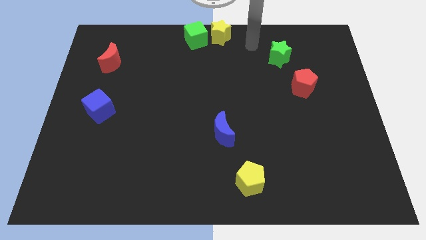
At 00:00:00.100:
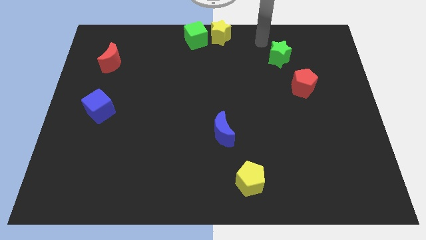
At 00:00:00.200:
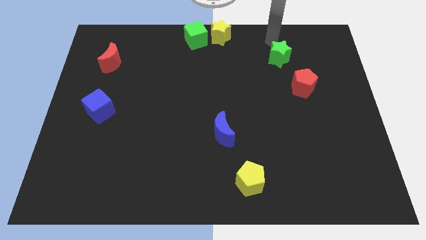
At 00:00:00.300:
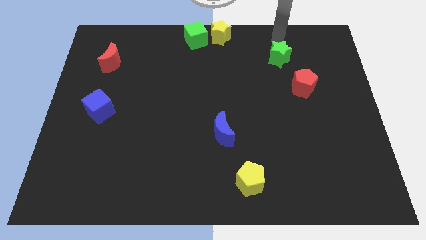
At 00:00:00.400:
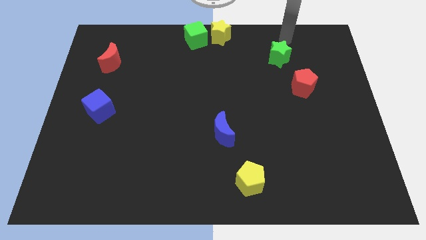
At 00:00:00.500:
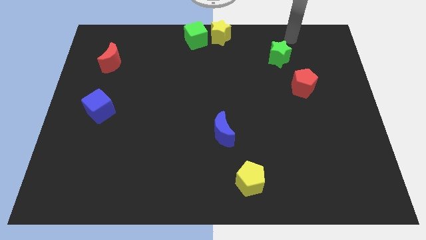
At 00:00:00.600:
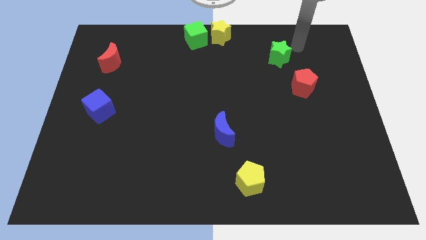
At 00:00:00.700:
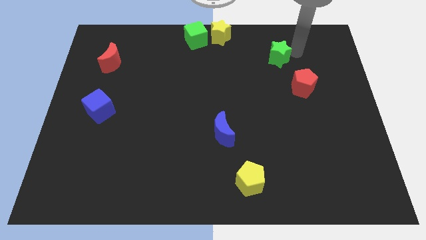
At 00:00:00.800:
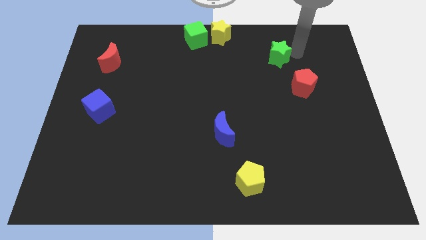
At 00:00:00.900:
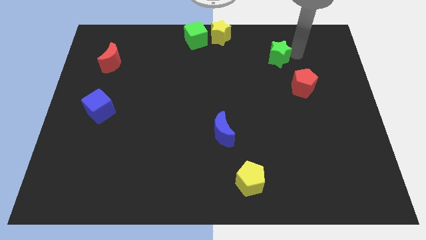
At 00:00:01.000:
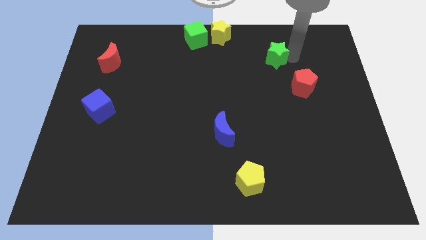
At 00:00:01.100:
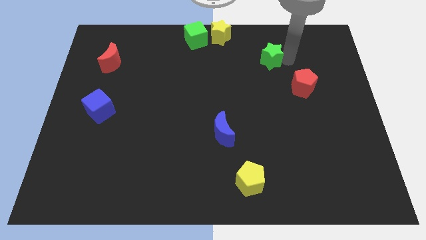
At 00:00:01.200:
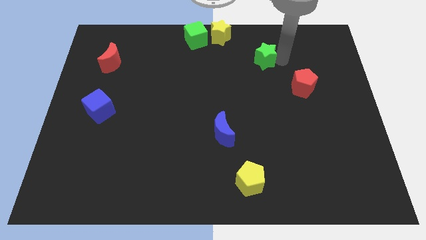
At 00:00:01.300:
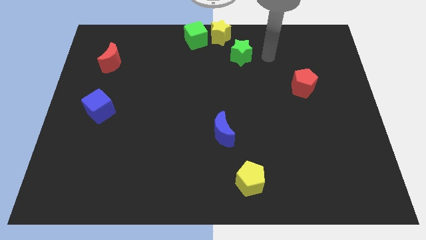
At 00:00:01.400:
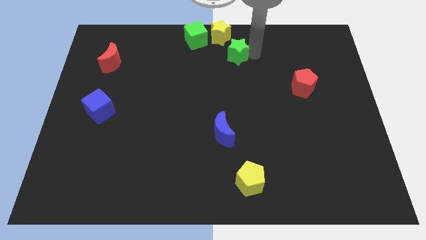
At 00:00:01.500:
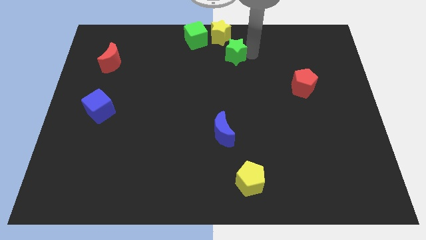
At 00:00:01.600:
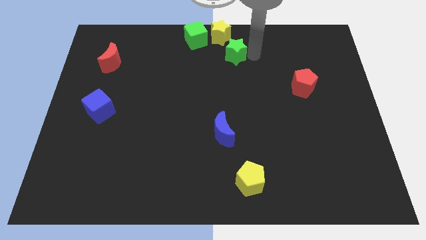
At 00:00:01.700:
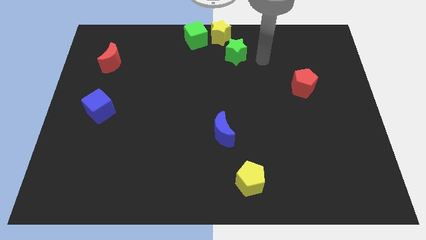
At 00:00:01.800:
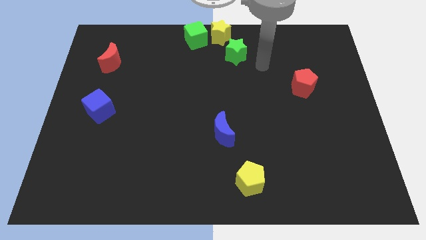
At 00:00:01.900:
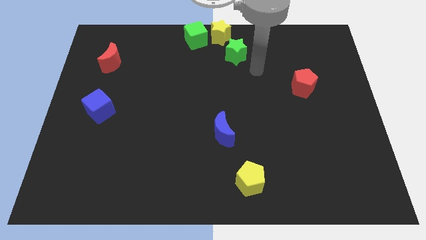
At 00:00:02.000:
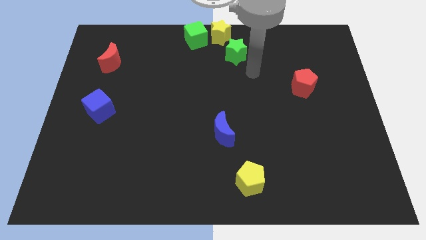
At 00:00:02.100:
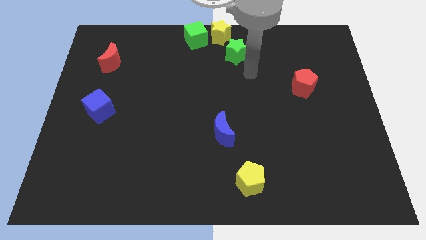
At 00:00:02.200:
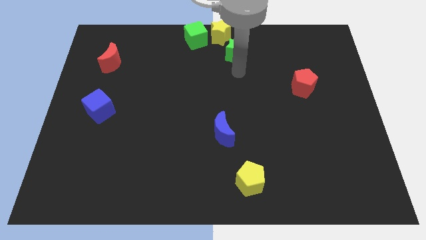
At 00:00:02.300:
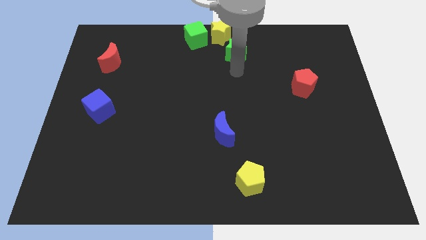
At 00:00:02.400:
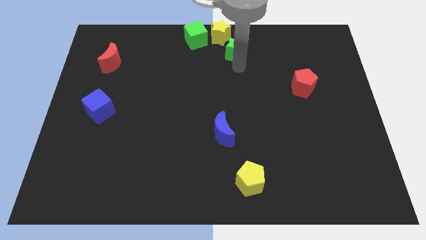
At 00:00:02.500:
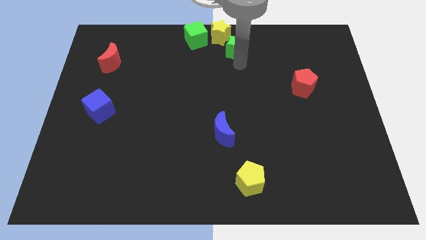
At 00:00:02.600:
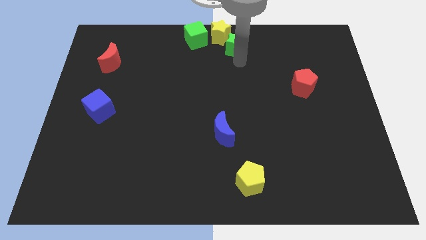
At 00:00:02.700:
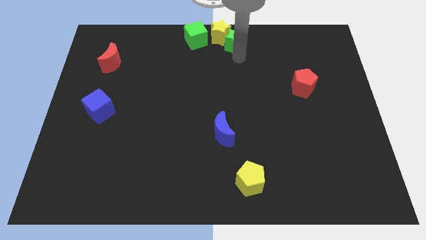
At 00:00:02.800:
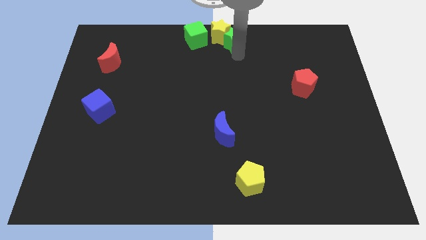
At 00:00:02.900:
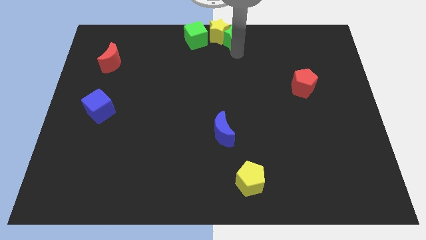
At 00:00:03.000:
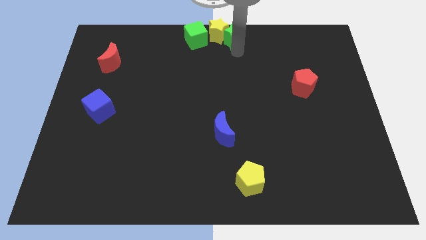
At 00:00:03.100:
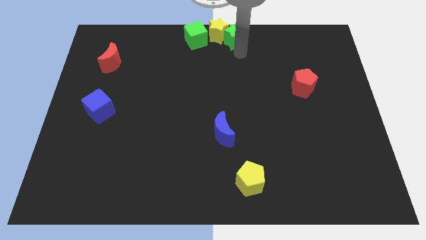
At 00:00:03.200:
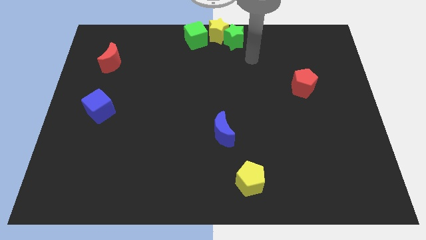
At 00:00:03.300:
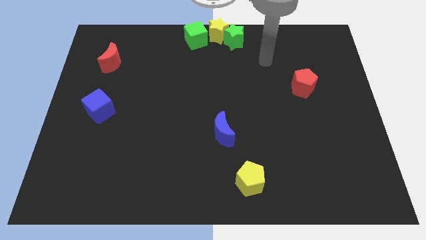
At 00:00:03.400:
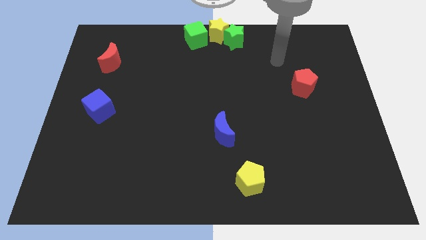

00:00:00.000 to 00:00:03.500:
push the green star to the right of the yellow star

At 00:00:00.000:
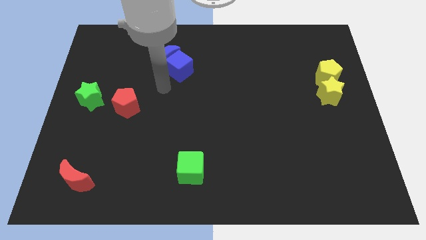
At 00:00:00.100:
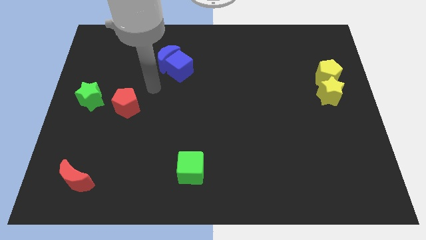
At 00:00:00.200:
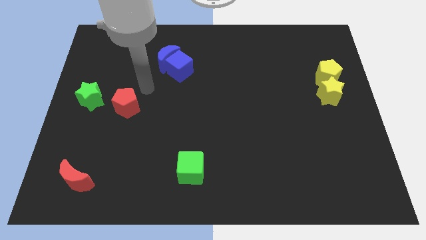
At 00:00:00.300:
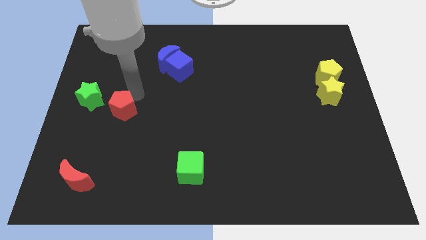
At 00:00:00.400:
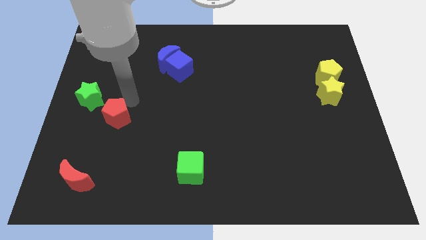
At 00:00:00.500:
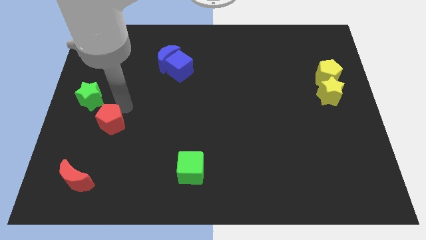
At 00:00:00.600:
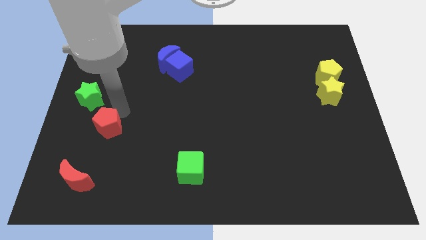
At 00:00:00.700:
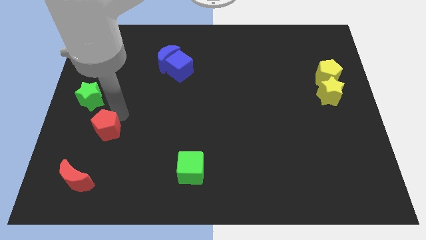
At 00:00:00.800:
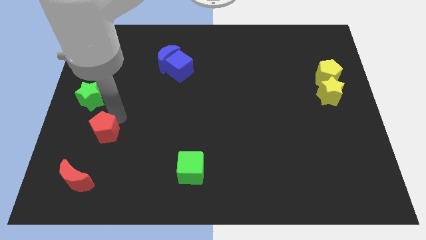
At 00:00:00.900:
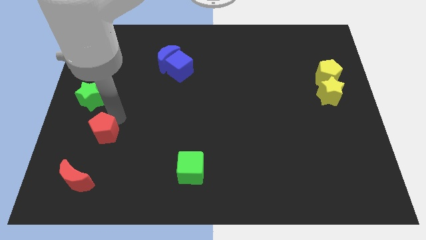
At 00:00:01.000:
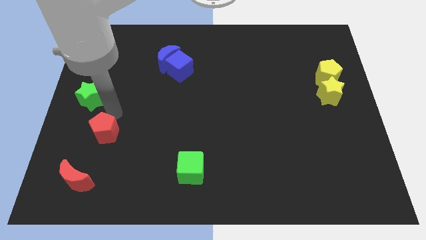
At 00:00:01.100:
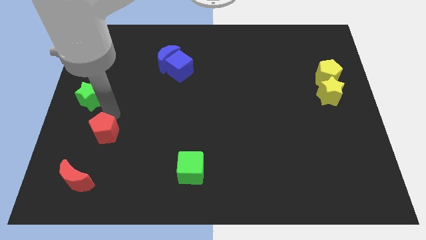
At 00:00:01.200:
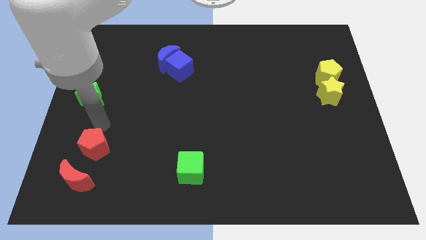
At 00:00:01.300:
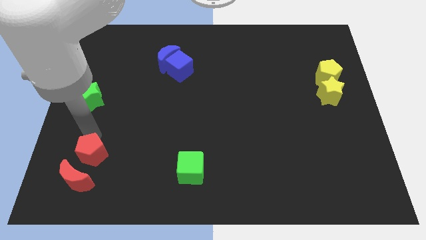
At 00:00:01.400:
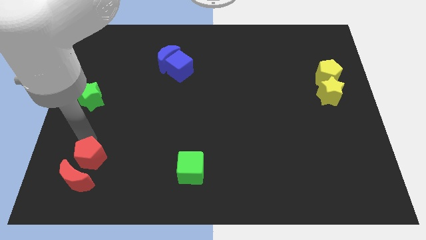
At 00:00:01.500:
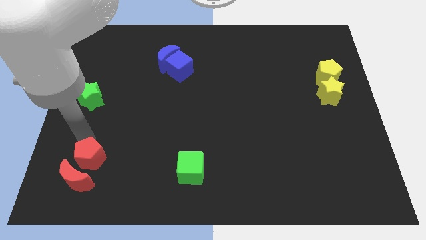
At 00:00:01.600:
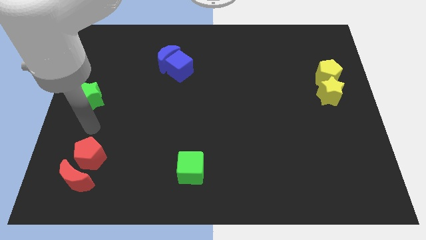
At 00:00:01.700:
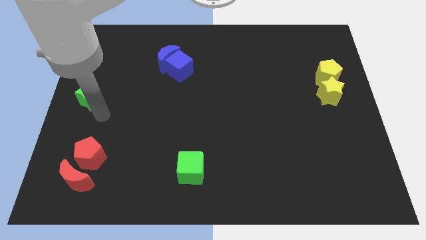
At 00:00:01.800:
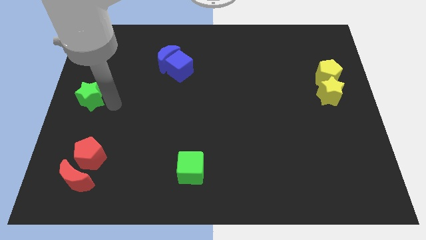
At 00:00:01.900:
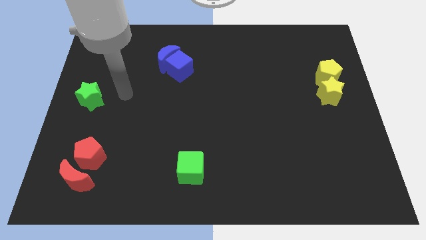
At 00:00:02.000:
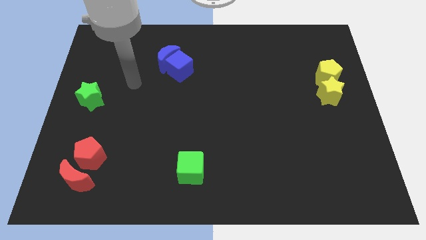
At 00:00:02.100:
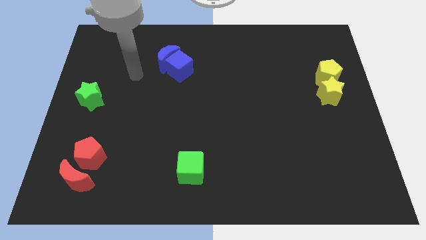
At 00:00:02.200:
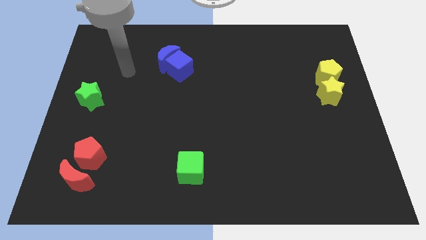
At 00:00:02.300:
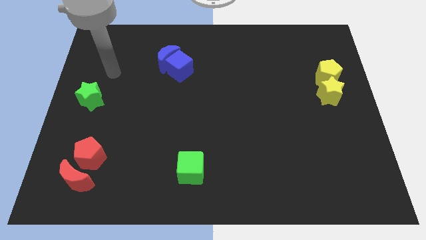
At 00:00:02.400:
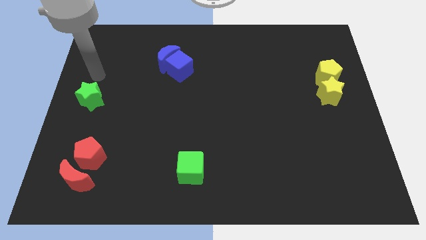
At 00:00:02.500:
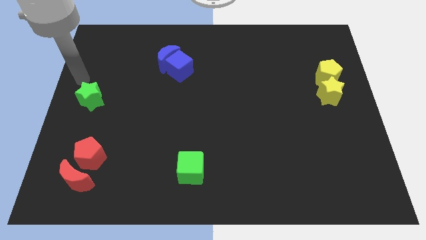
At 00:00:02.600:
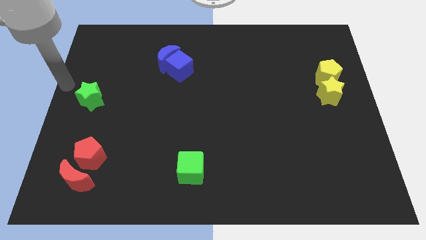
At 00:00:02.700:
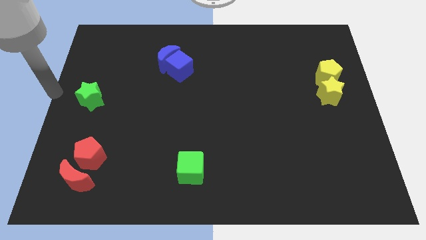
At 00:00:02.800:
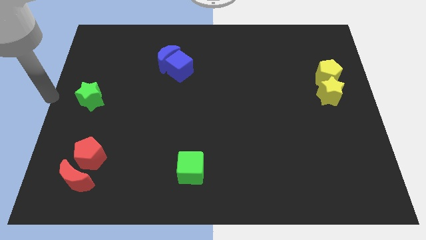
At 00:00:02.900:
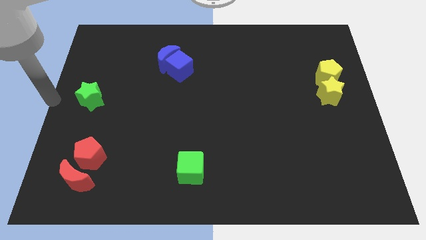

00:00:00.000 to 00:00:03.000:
push the red pentagon to the top of red crescent

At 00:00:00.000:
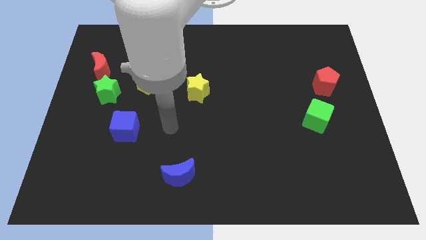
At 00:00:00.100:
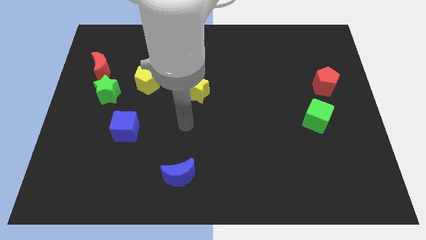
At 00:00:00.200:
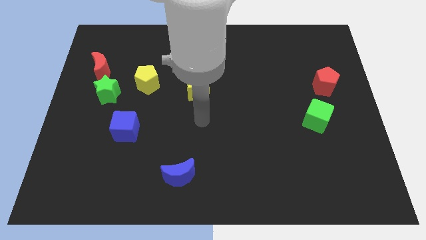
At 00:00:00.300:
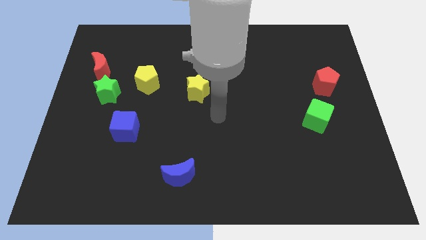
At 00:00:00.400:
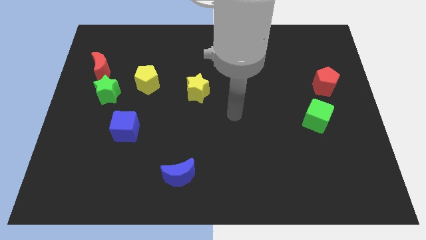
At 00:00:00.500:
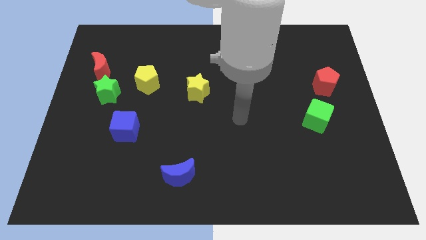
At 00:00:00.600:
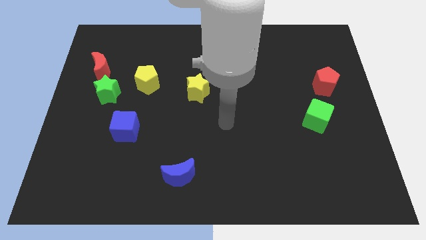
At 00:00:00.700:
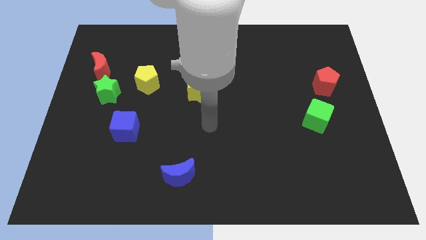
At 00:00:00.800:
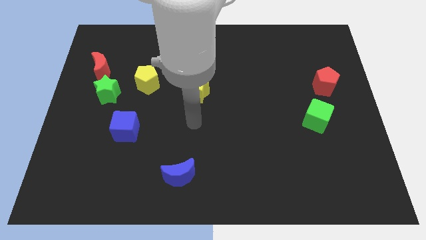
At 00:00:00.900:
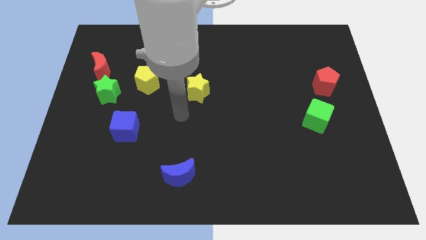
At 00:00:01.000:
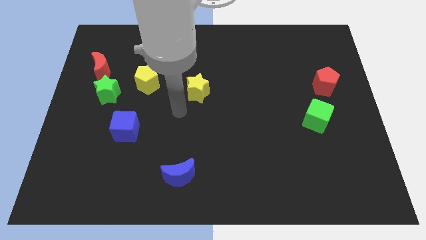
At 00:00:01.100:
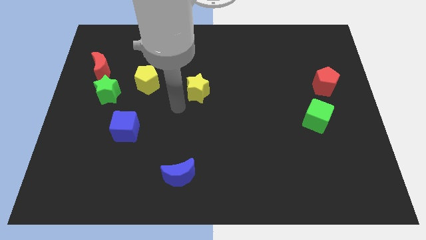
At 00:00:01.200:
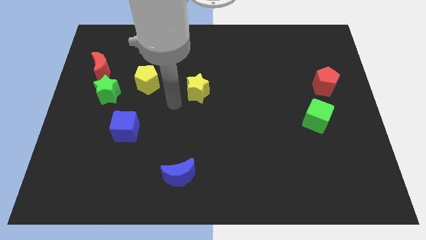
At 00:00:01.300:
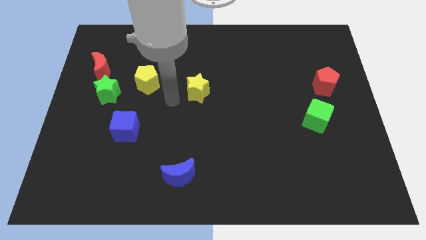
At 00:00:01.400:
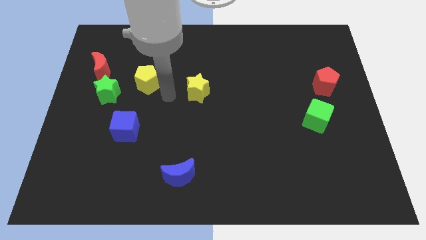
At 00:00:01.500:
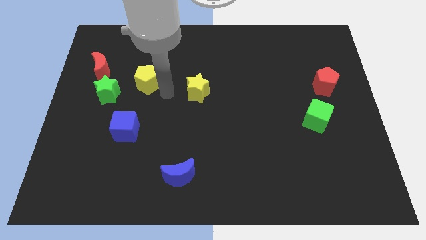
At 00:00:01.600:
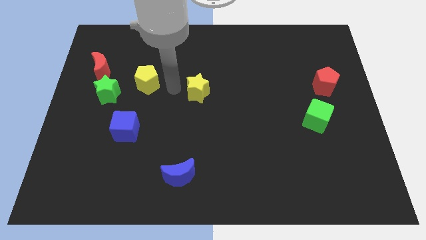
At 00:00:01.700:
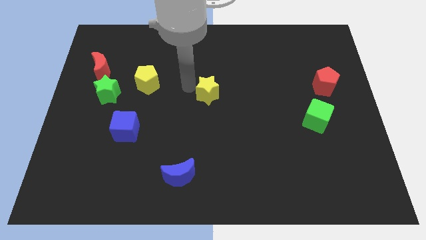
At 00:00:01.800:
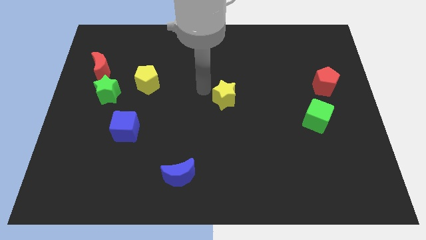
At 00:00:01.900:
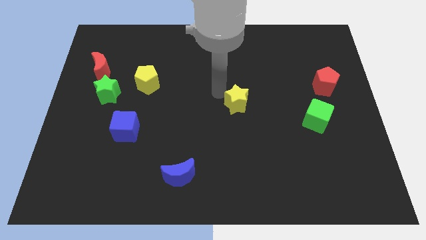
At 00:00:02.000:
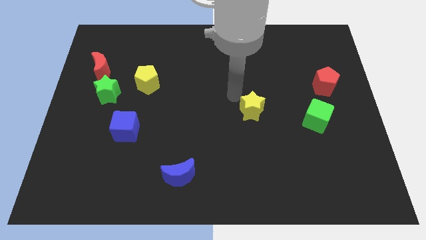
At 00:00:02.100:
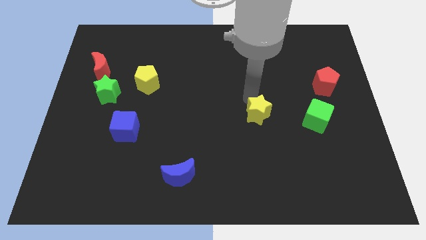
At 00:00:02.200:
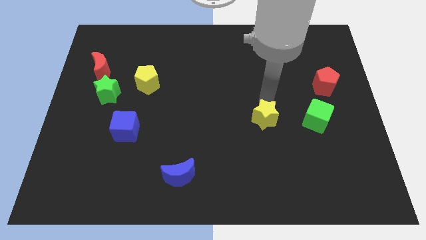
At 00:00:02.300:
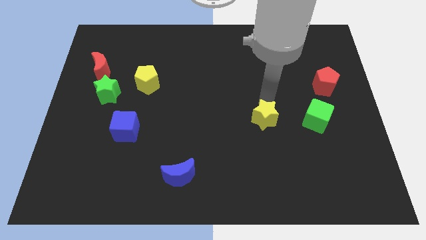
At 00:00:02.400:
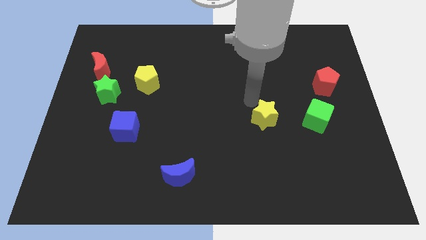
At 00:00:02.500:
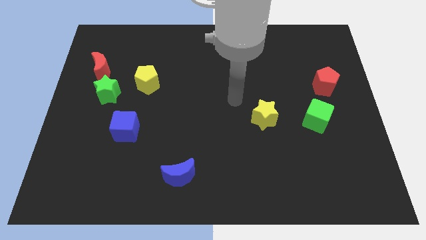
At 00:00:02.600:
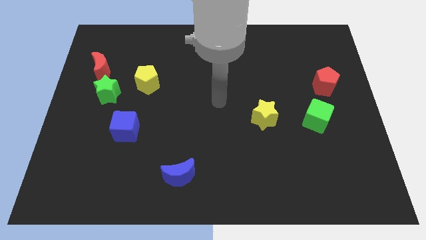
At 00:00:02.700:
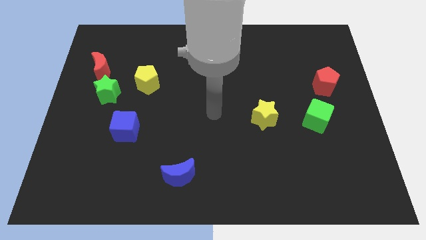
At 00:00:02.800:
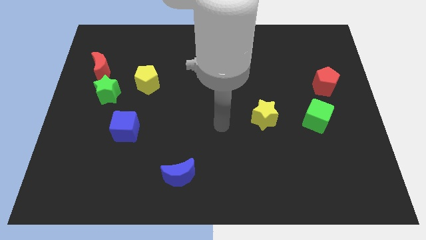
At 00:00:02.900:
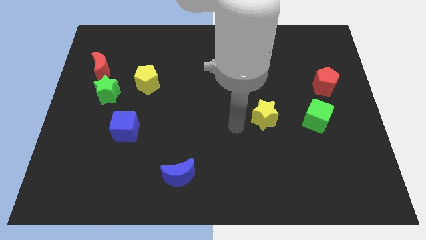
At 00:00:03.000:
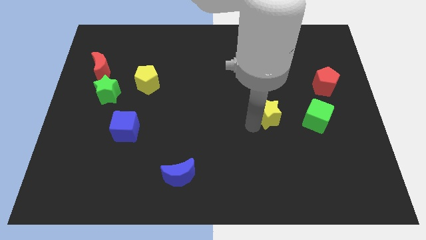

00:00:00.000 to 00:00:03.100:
place the yellow star to the left of the green cube
